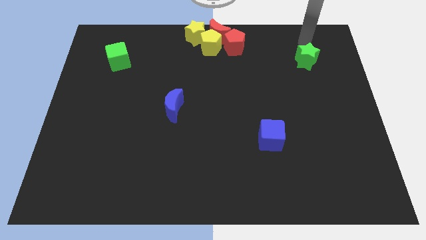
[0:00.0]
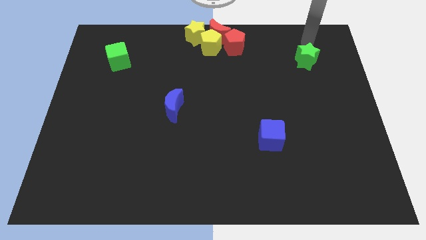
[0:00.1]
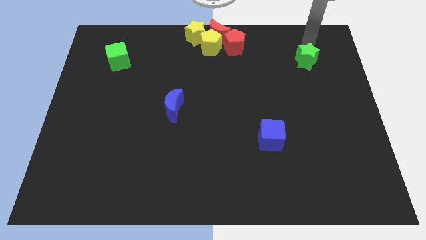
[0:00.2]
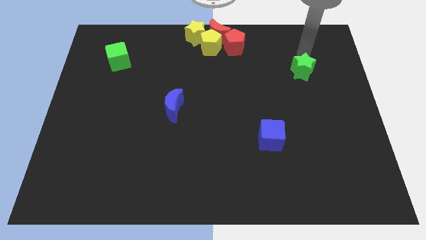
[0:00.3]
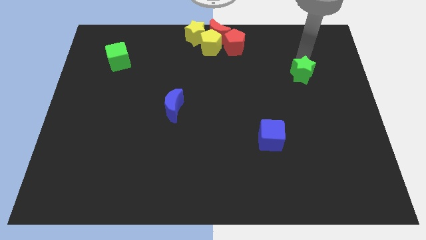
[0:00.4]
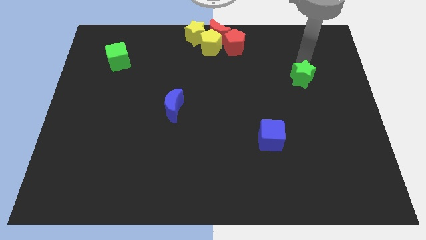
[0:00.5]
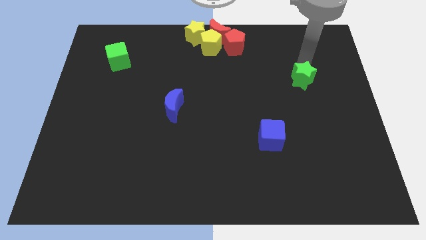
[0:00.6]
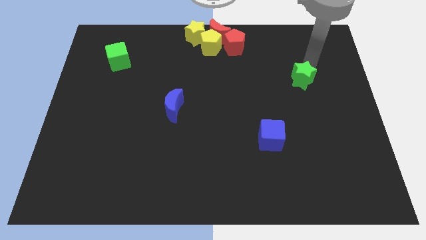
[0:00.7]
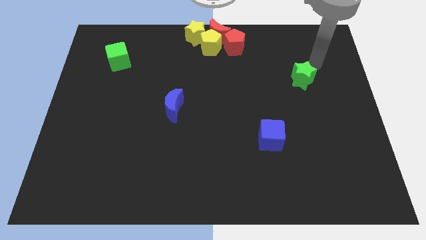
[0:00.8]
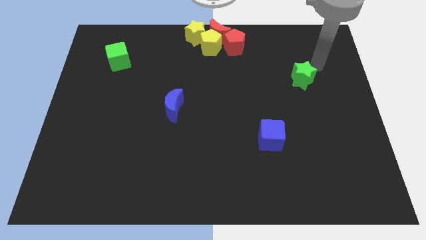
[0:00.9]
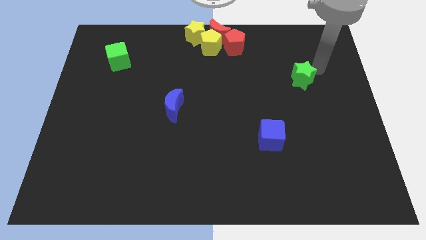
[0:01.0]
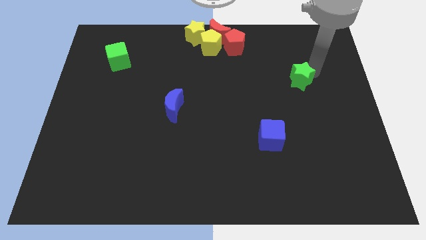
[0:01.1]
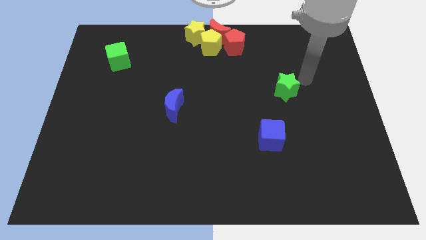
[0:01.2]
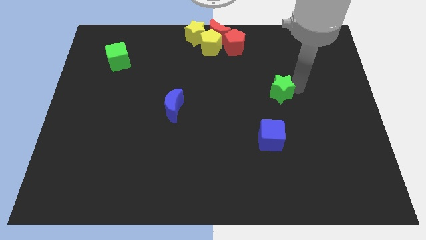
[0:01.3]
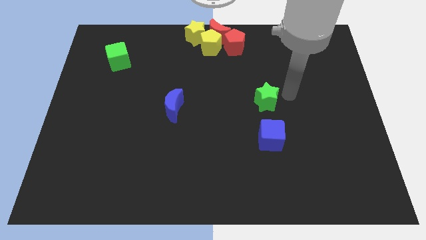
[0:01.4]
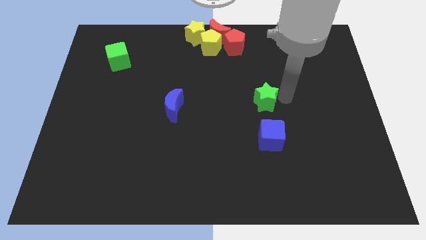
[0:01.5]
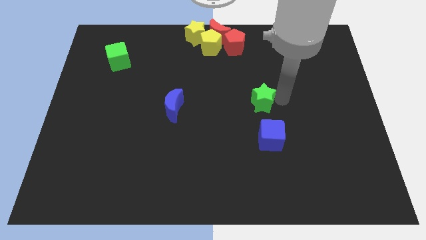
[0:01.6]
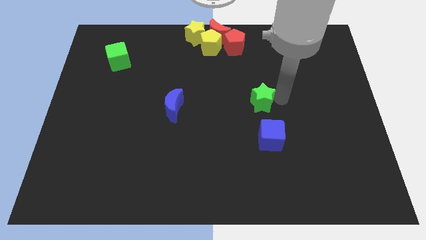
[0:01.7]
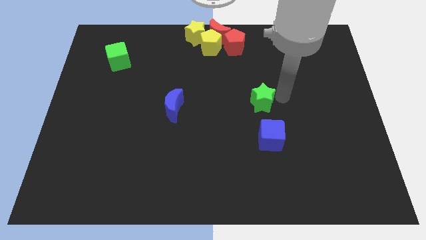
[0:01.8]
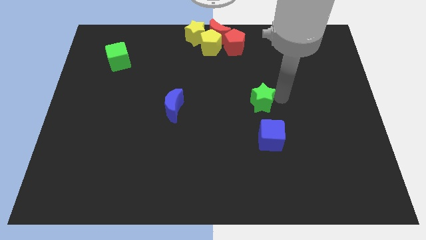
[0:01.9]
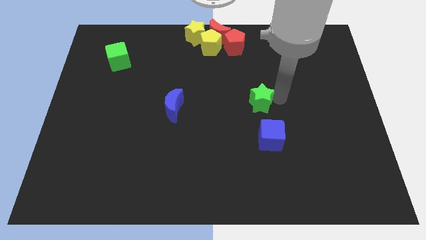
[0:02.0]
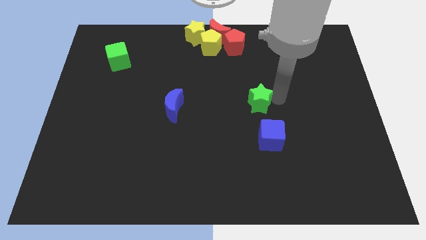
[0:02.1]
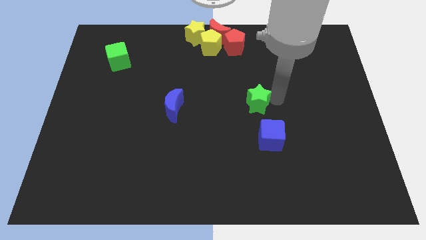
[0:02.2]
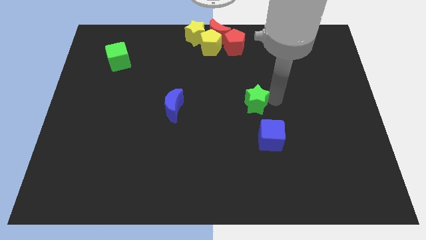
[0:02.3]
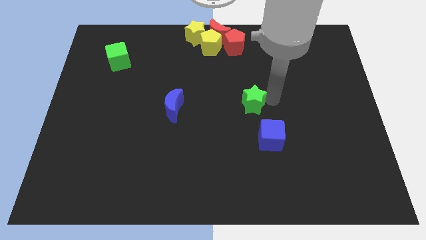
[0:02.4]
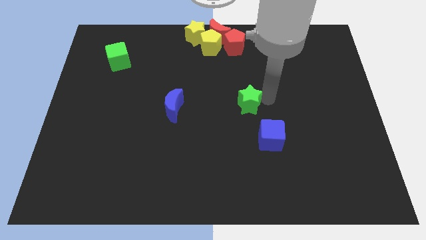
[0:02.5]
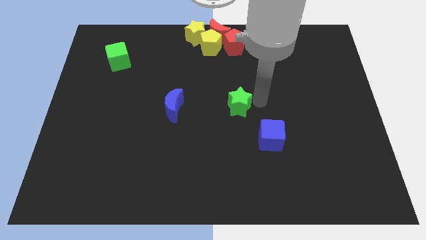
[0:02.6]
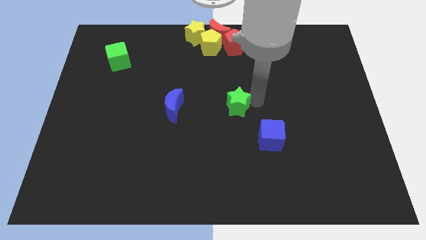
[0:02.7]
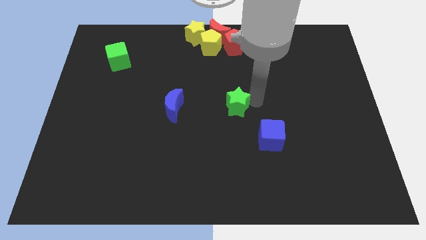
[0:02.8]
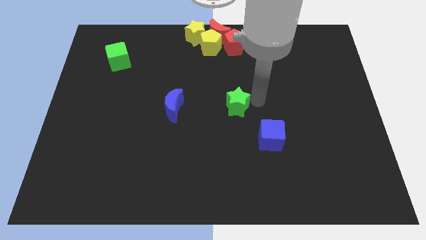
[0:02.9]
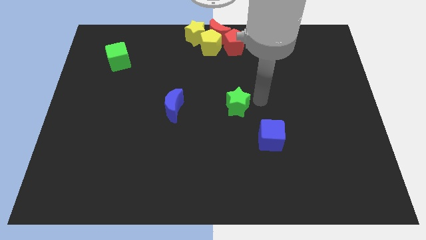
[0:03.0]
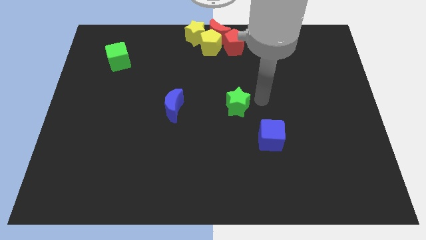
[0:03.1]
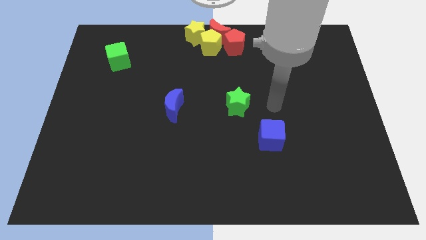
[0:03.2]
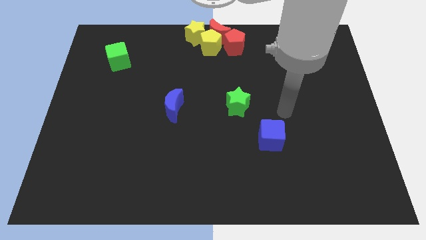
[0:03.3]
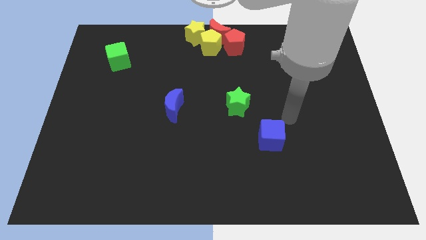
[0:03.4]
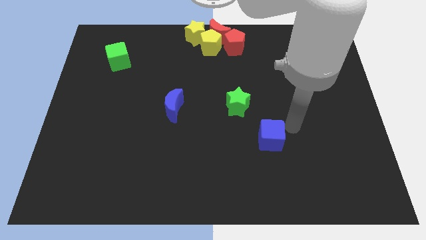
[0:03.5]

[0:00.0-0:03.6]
drag the green star diagonally top left to the blue cube

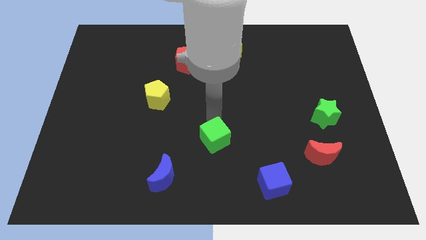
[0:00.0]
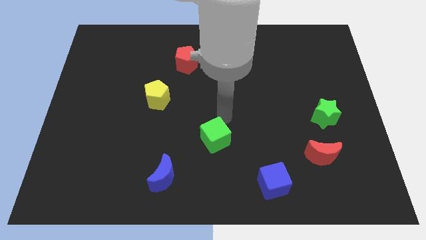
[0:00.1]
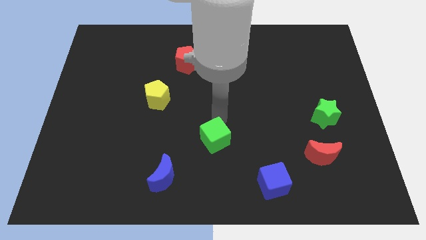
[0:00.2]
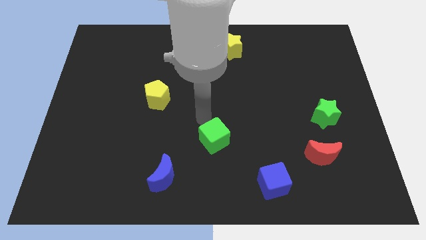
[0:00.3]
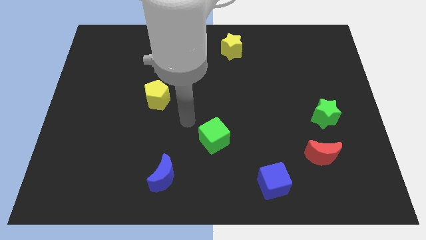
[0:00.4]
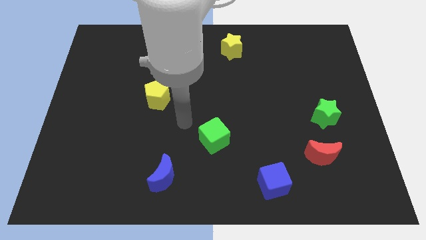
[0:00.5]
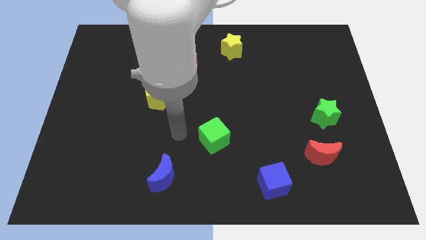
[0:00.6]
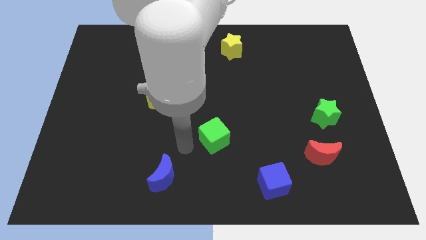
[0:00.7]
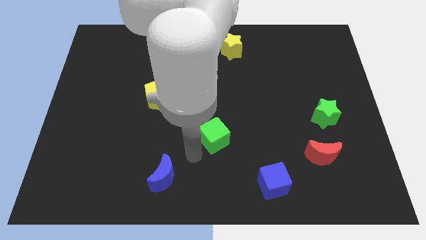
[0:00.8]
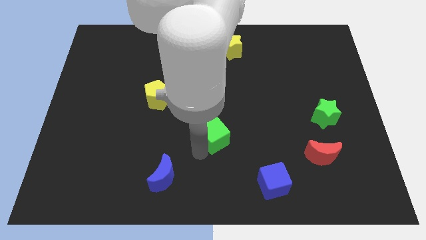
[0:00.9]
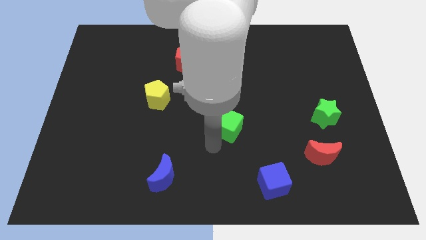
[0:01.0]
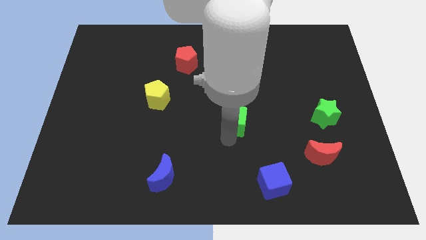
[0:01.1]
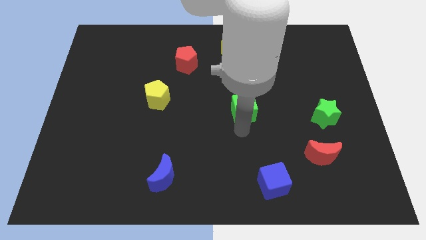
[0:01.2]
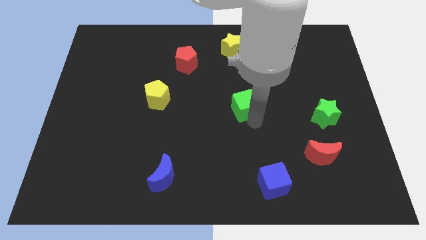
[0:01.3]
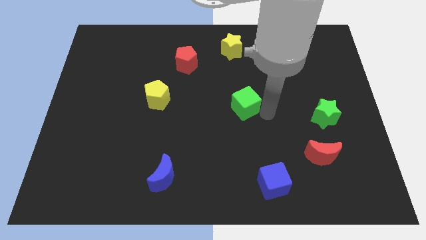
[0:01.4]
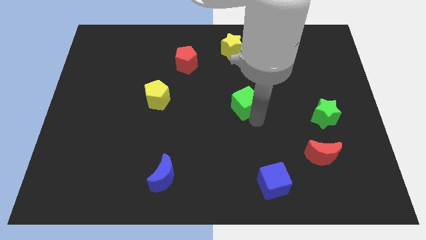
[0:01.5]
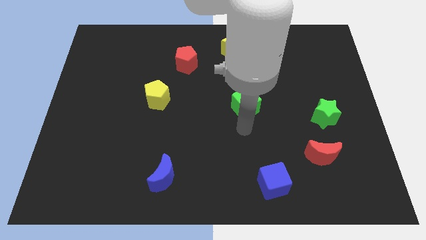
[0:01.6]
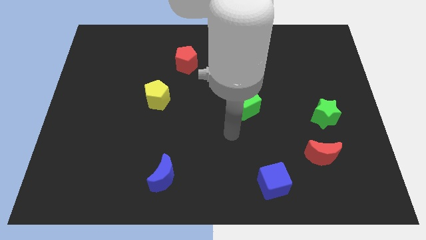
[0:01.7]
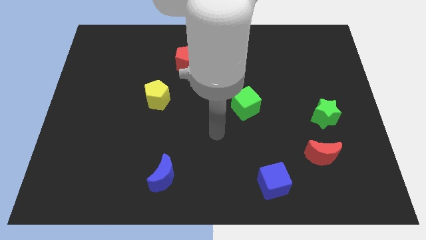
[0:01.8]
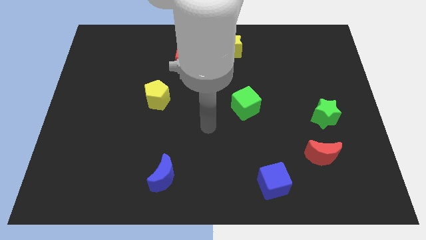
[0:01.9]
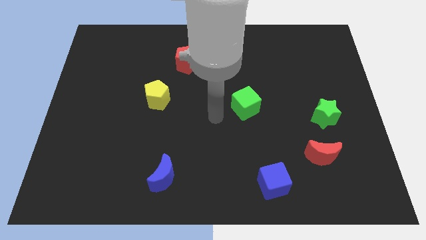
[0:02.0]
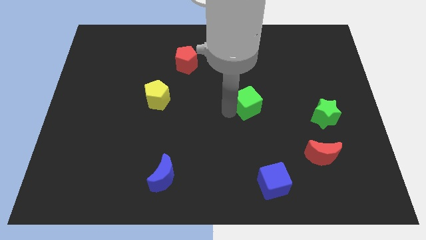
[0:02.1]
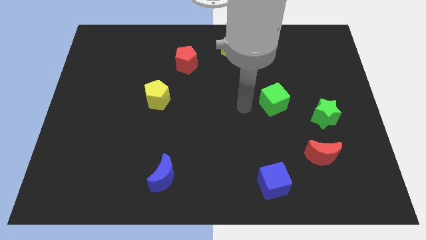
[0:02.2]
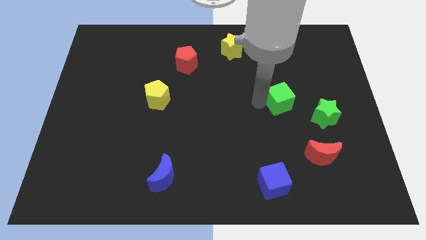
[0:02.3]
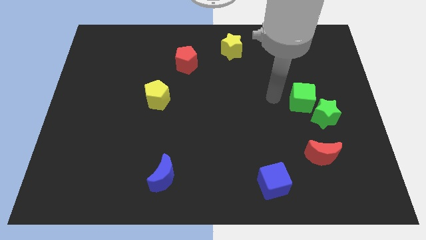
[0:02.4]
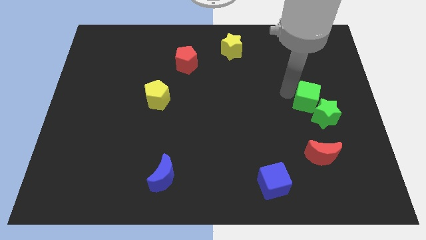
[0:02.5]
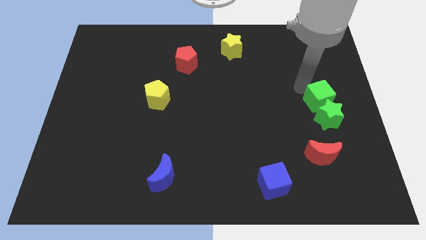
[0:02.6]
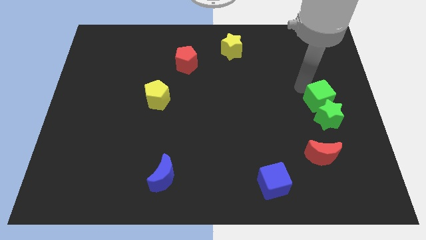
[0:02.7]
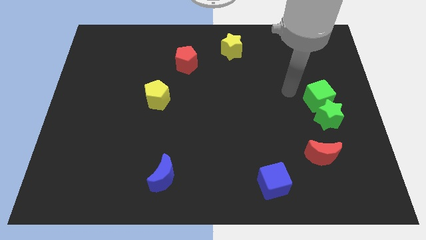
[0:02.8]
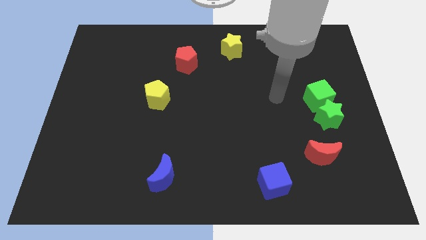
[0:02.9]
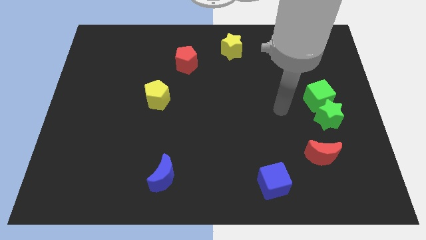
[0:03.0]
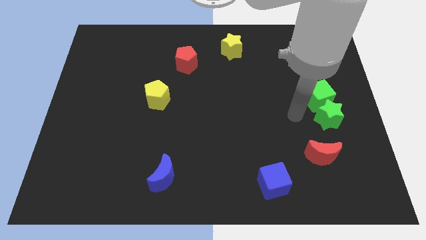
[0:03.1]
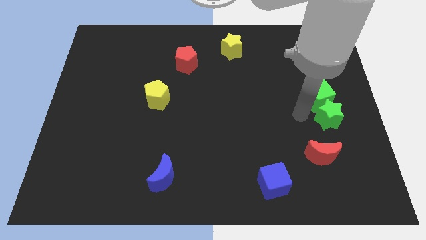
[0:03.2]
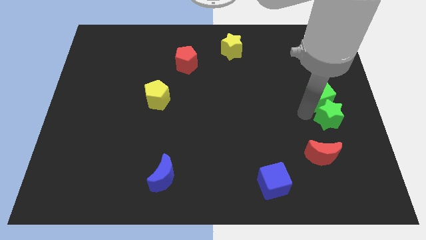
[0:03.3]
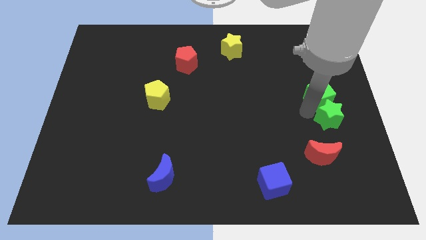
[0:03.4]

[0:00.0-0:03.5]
move the green cube above the green star

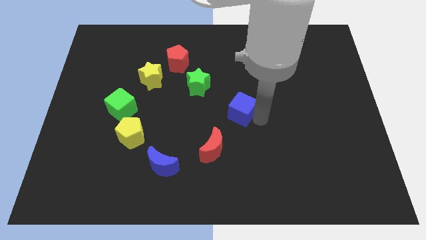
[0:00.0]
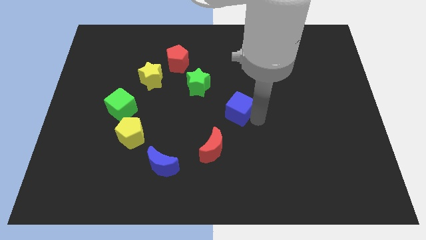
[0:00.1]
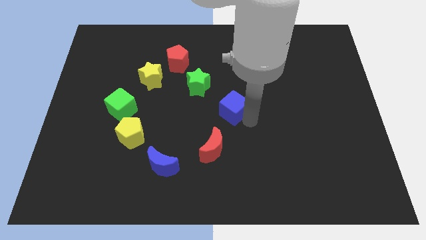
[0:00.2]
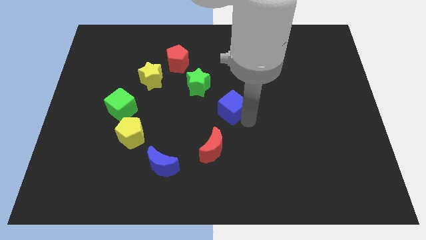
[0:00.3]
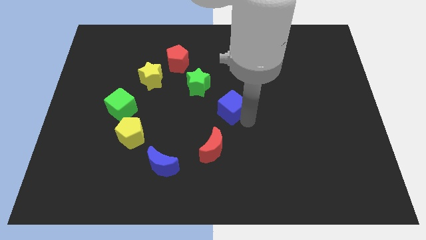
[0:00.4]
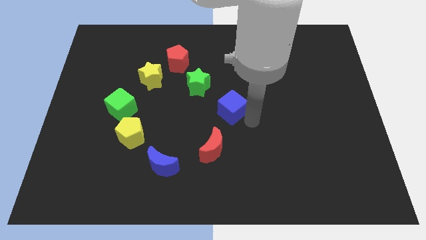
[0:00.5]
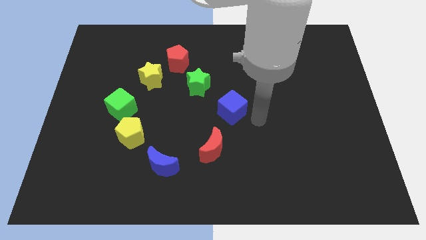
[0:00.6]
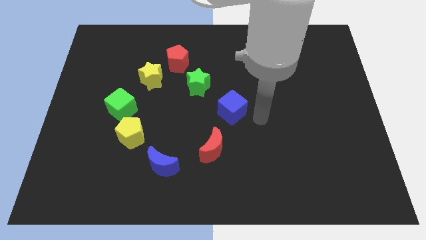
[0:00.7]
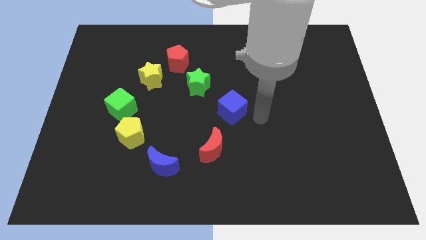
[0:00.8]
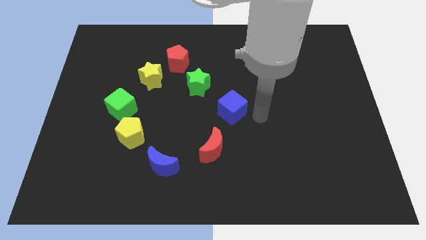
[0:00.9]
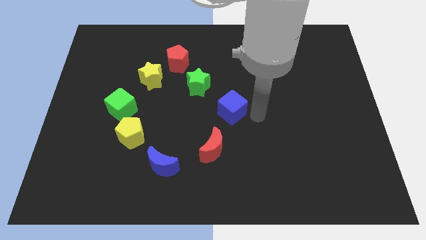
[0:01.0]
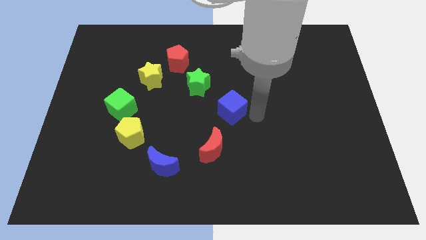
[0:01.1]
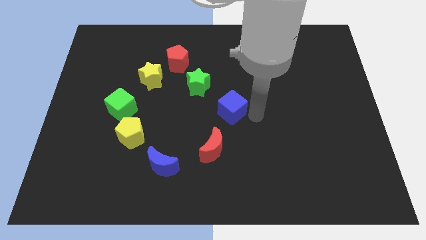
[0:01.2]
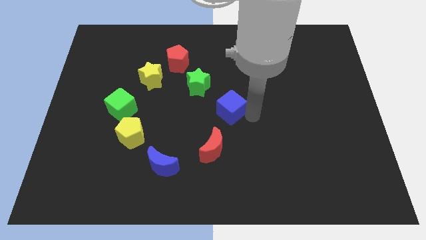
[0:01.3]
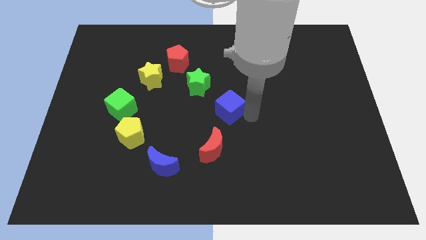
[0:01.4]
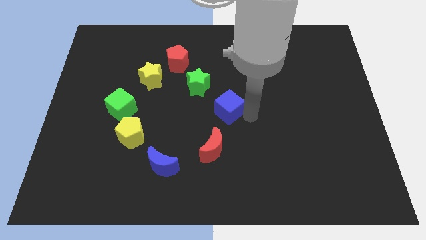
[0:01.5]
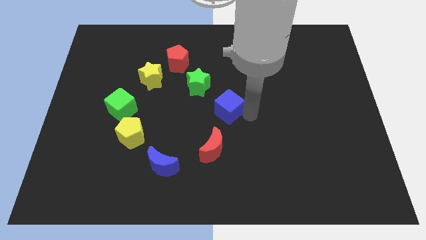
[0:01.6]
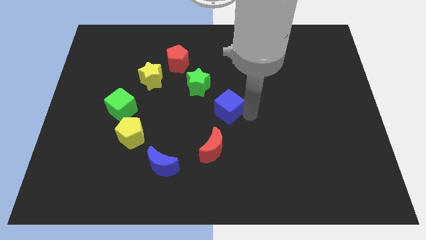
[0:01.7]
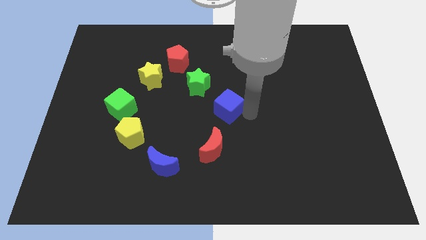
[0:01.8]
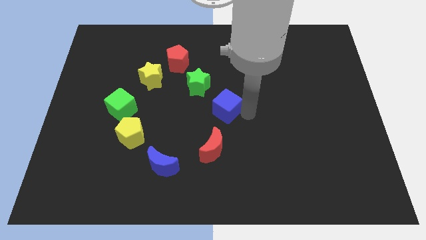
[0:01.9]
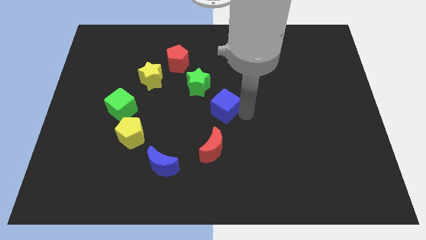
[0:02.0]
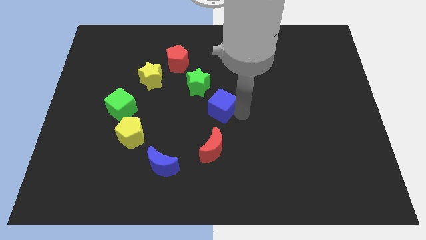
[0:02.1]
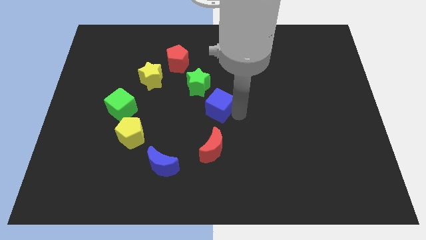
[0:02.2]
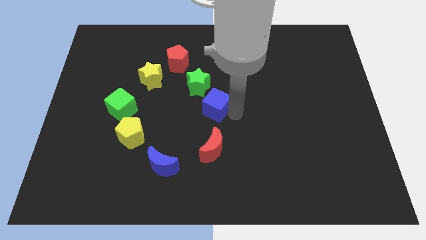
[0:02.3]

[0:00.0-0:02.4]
push the blue cube to the top of the red crescent
